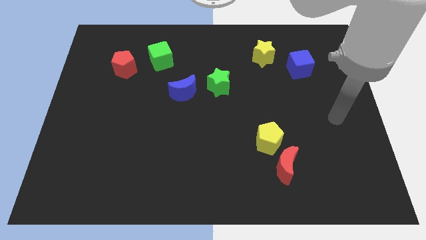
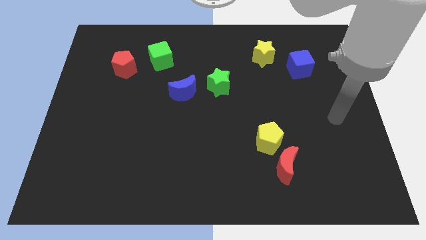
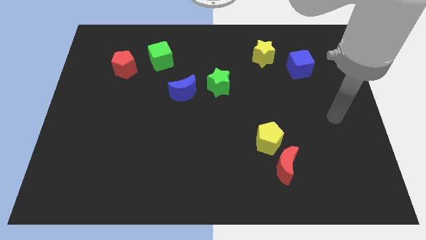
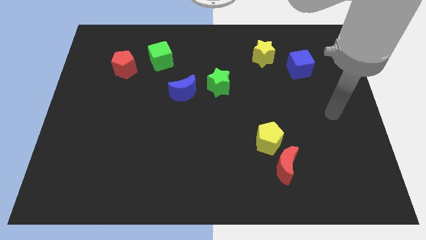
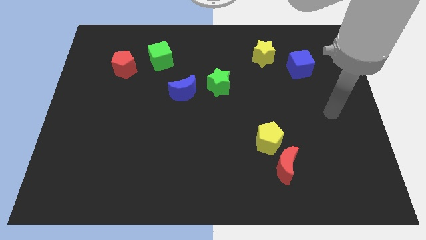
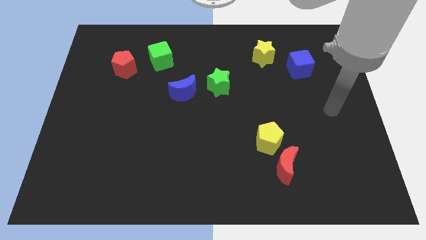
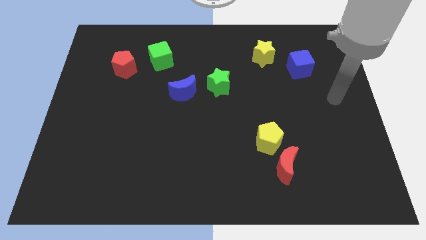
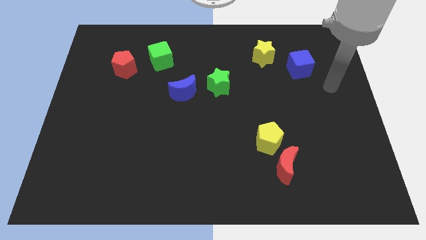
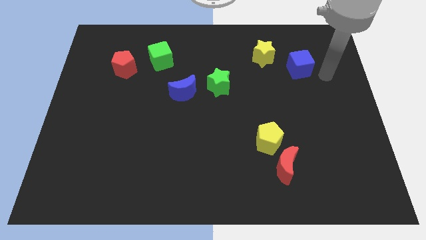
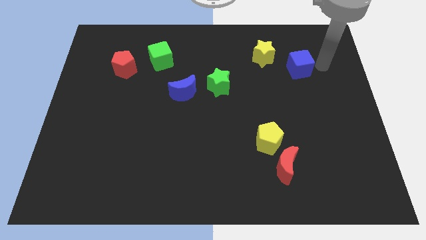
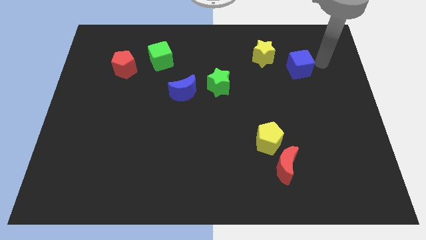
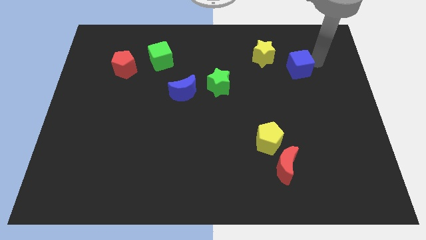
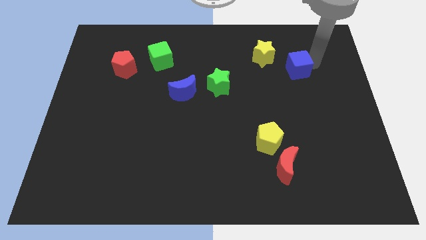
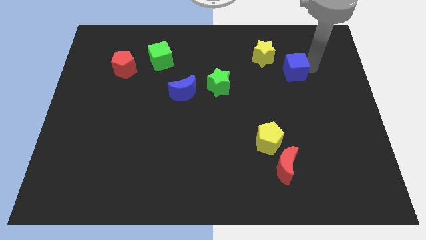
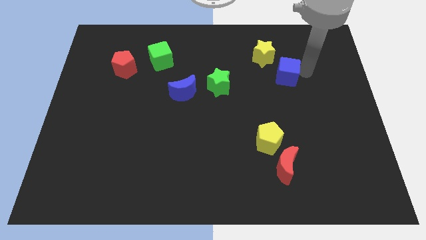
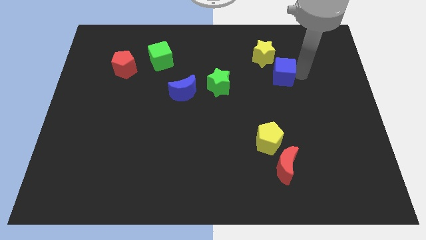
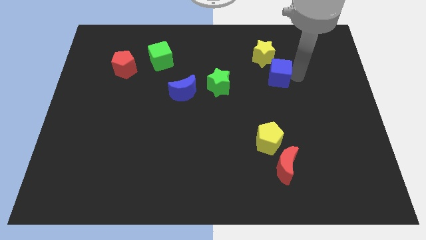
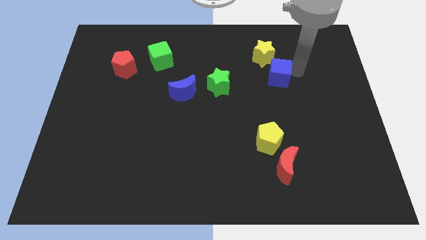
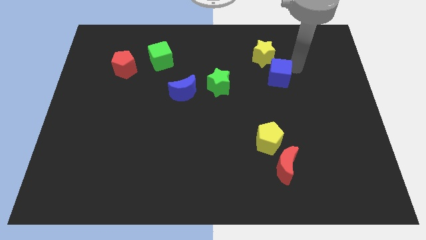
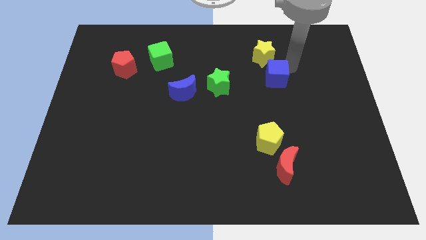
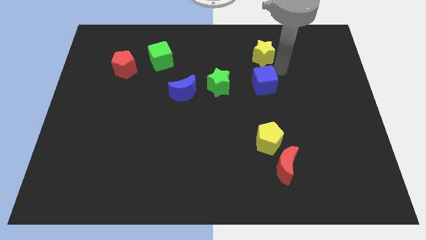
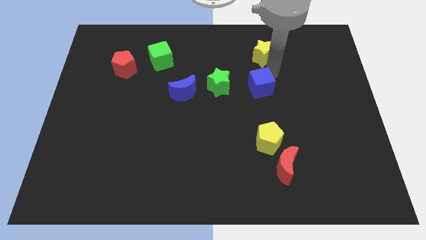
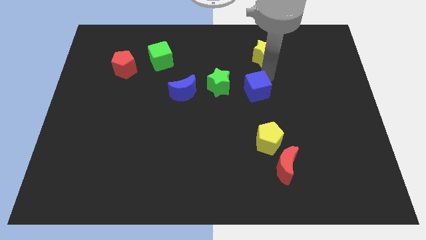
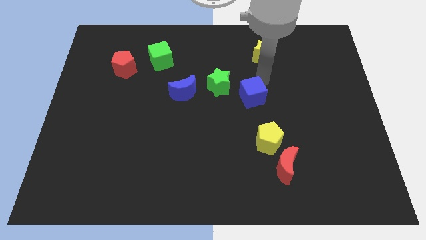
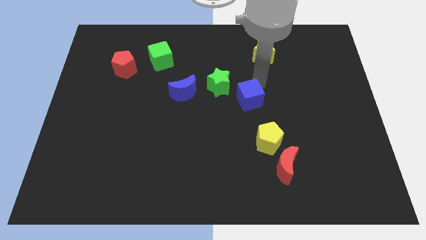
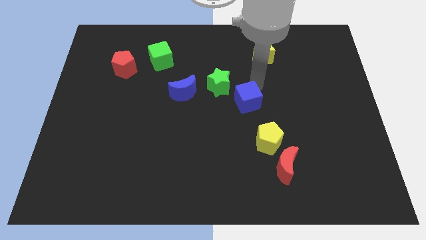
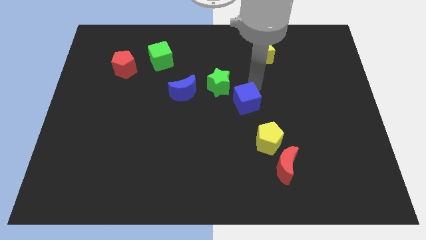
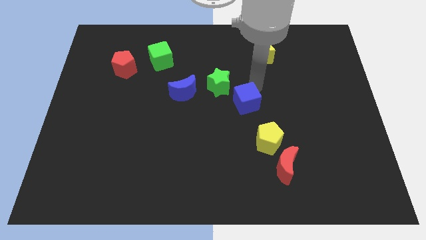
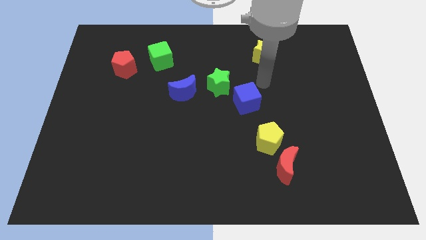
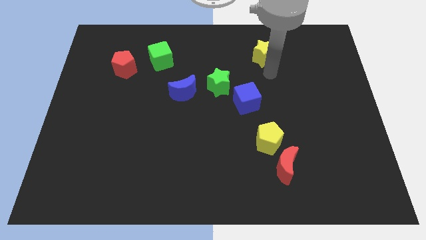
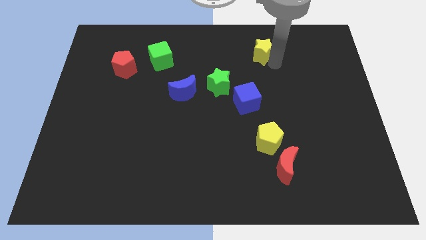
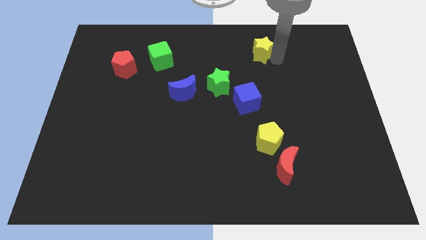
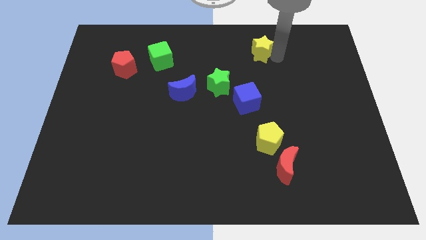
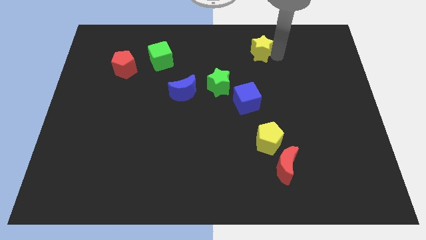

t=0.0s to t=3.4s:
push the blue cube close to the green star

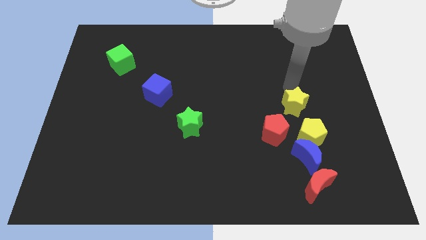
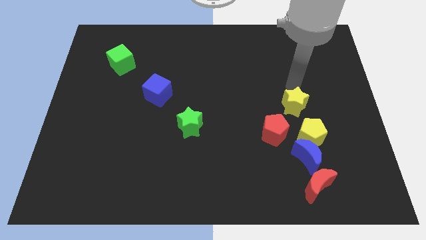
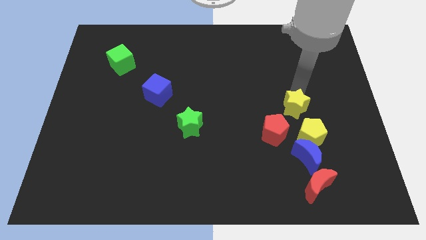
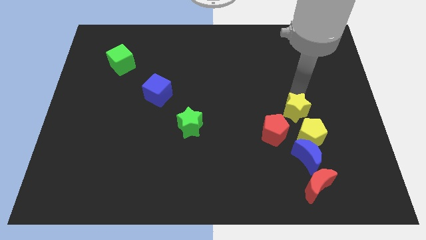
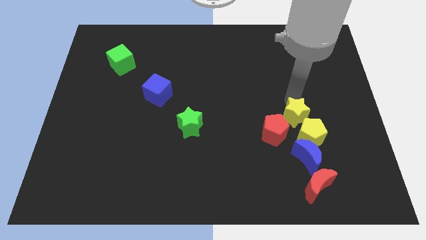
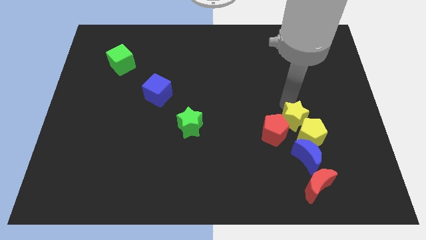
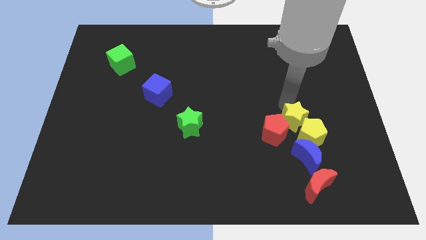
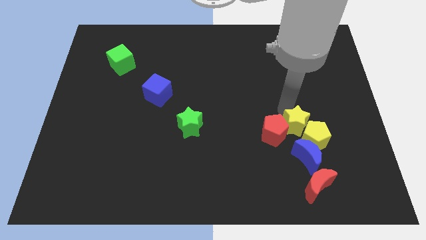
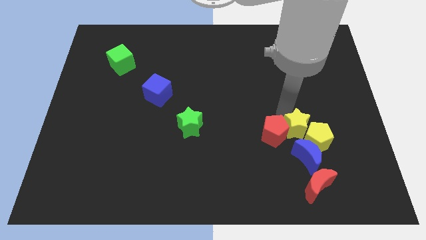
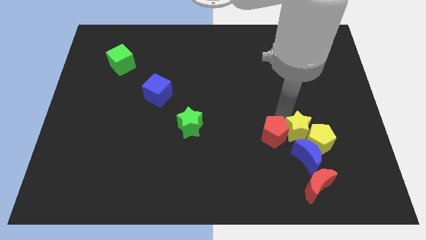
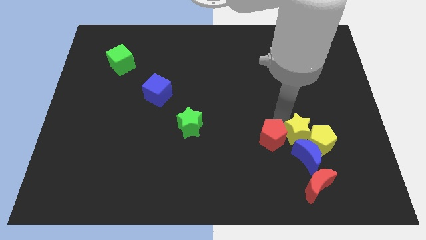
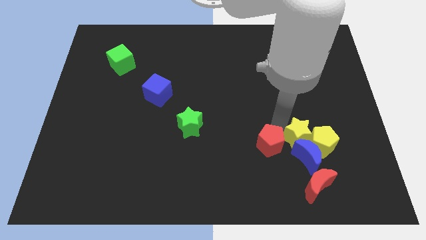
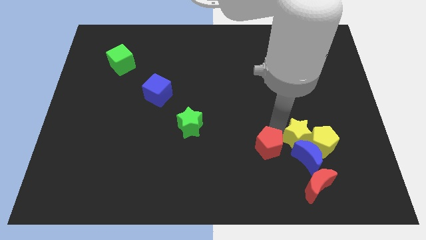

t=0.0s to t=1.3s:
move the yellow star in between the yellow and red pentagons

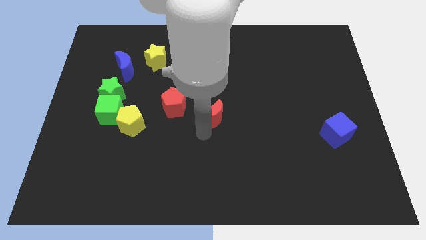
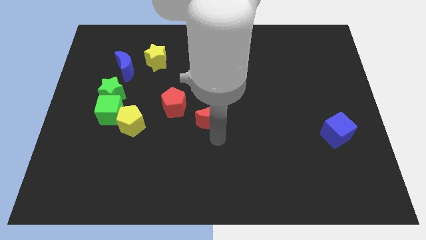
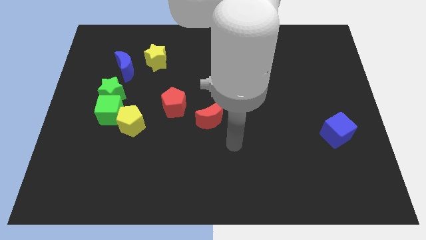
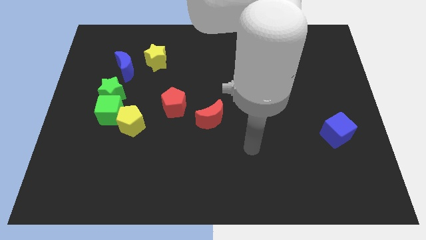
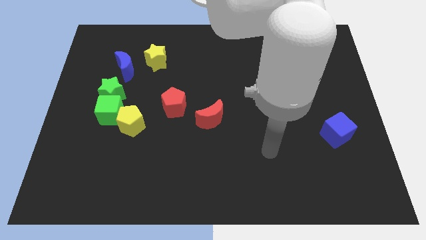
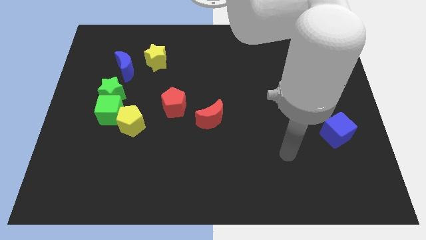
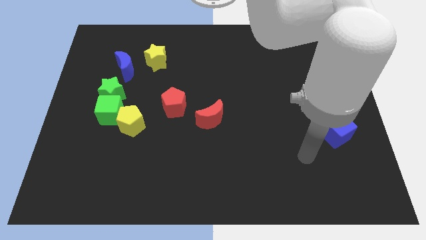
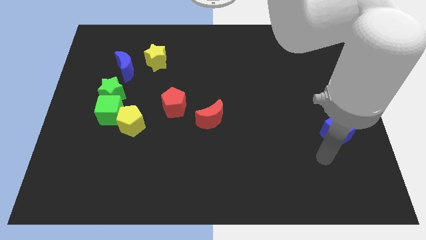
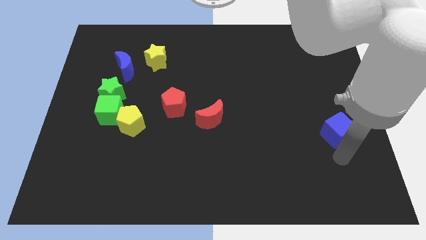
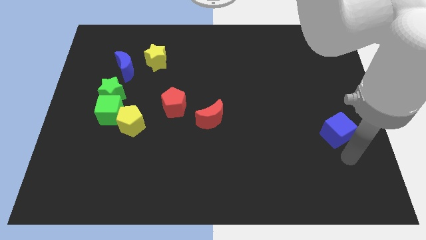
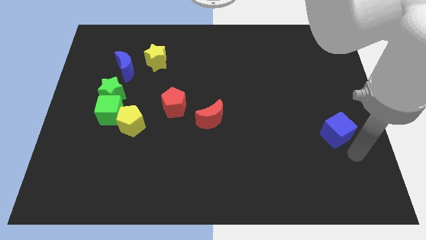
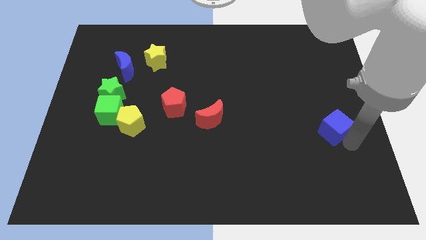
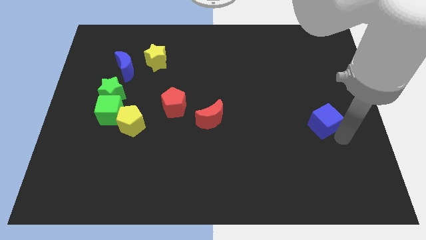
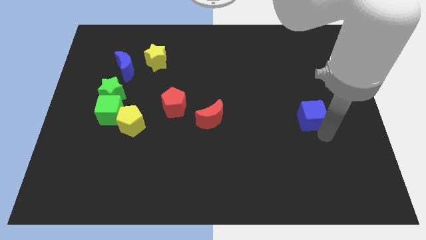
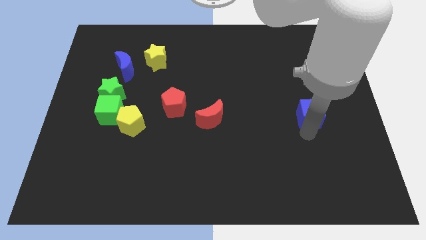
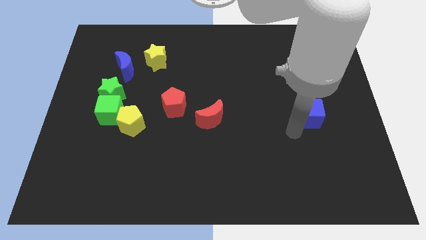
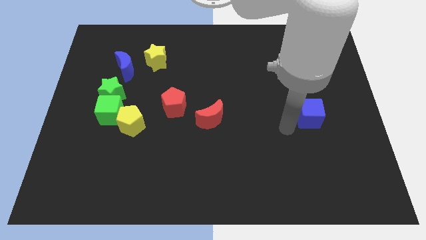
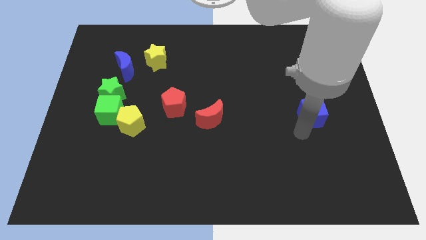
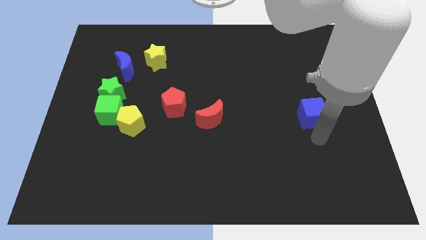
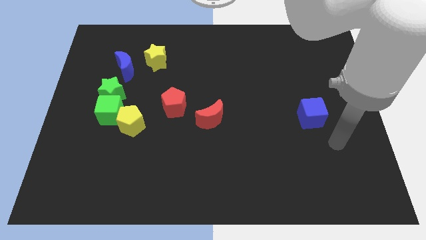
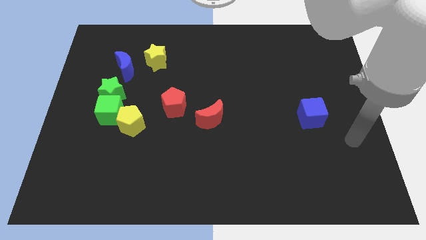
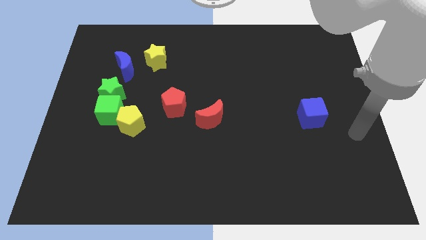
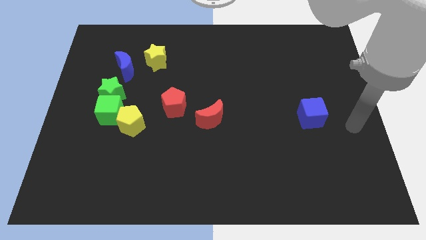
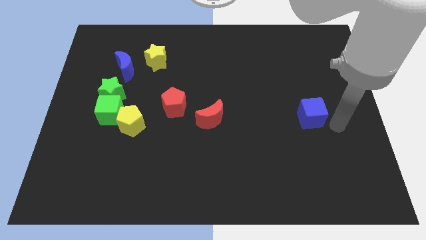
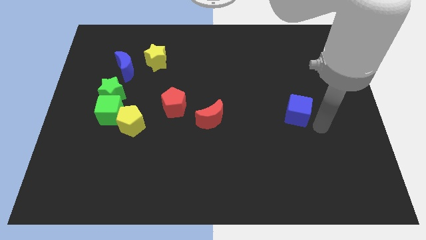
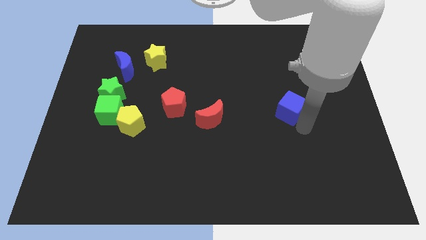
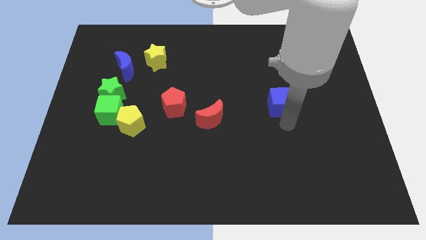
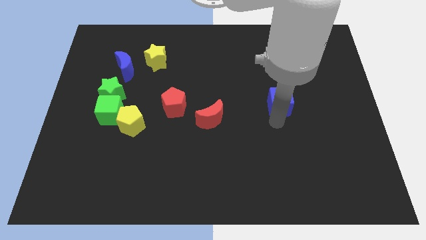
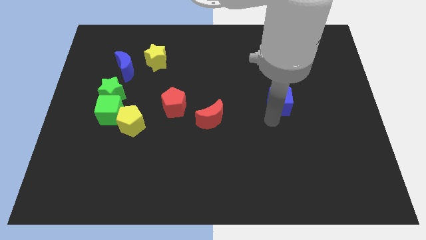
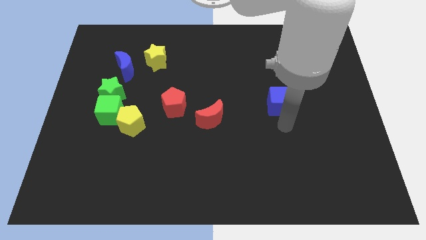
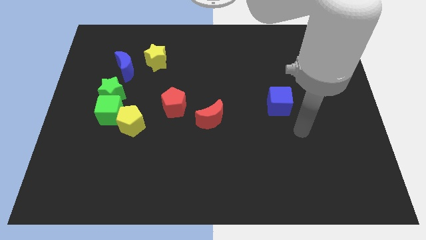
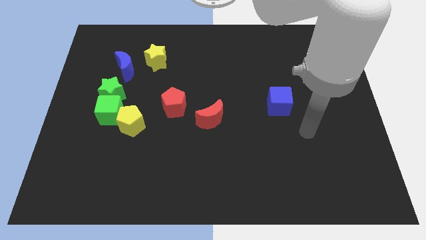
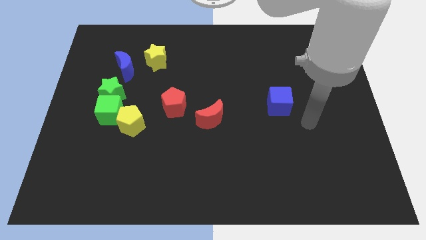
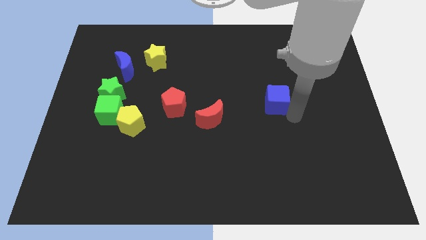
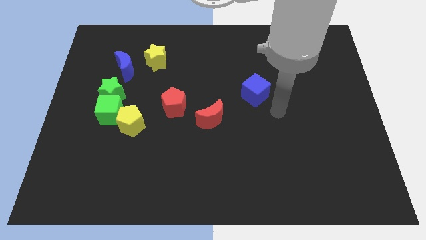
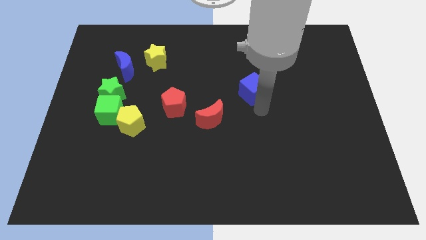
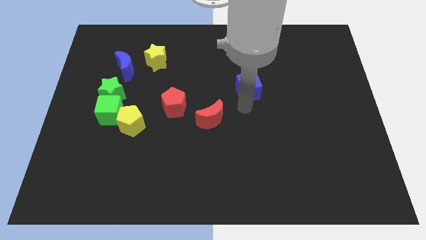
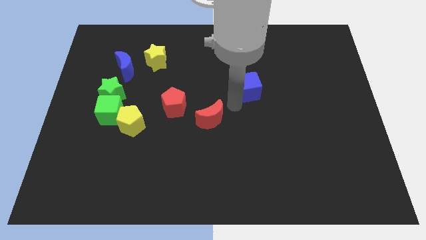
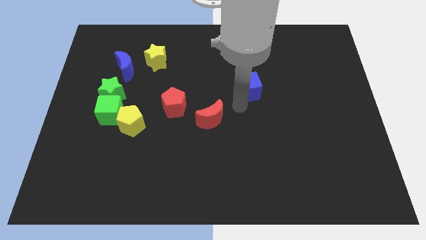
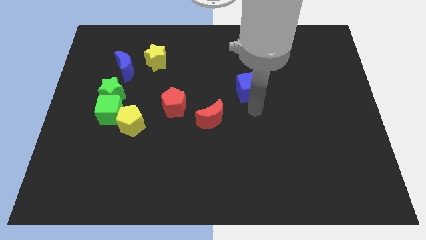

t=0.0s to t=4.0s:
place the blue cube diagonally above the top right side of the red crescent

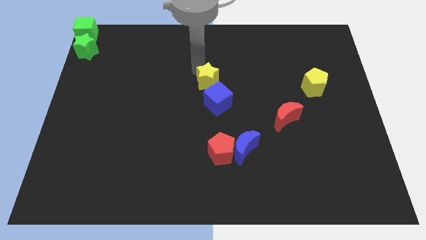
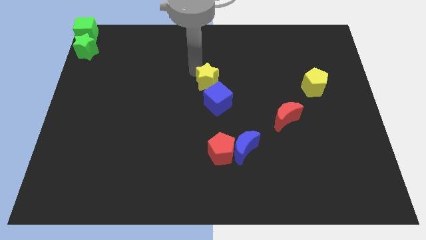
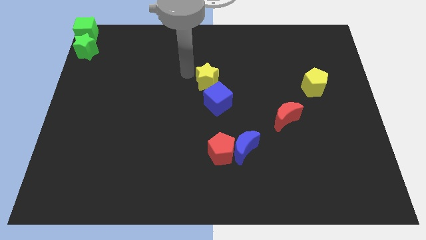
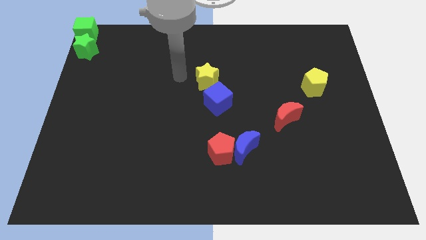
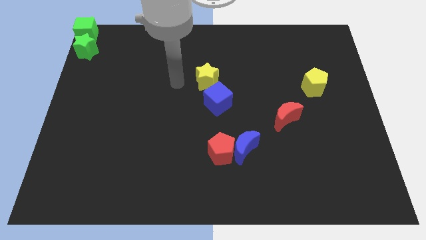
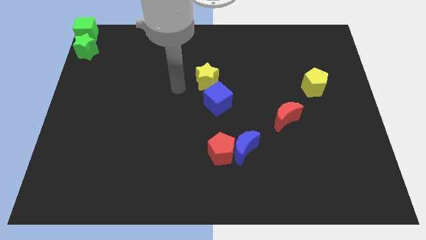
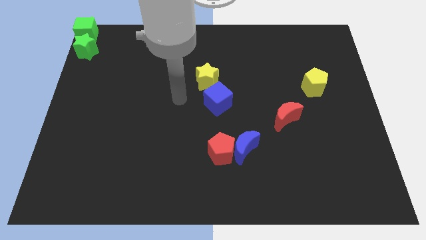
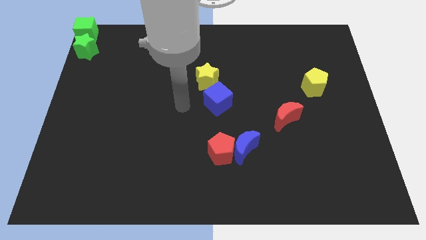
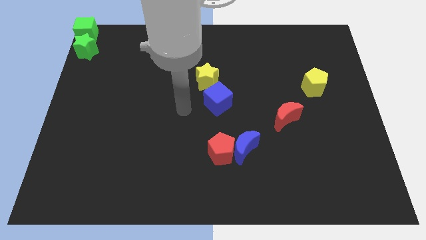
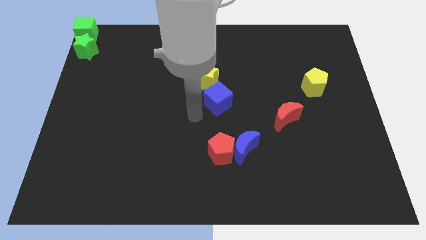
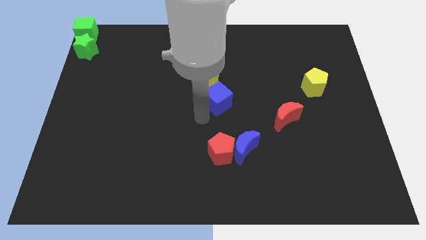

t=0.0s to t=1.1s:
move away from the yellow star
